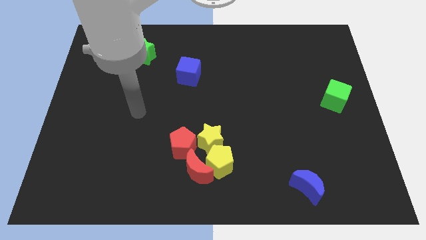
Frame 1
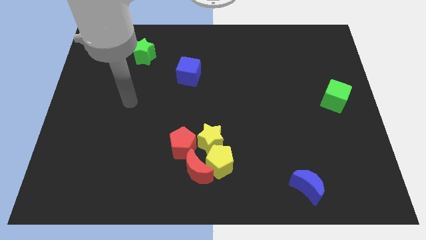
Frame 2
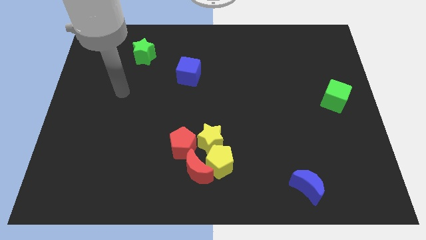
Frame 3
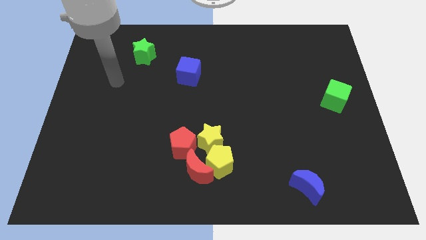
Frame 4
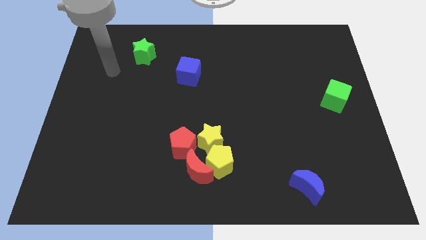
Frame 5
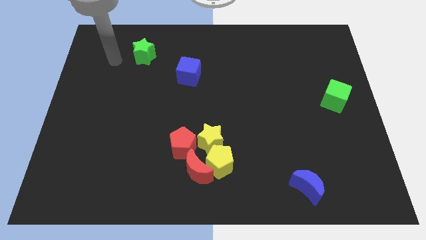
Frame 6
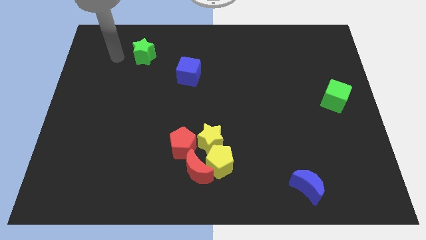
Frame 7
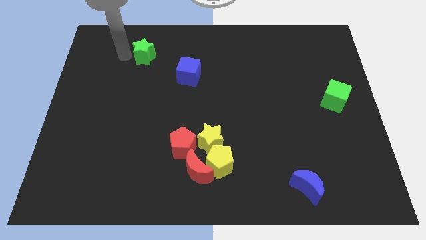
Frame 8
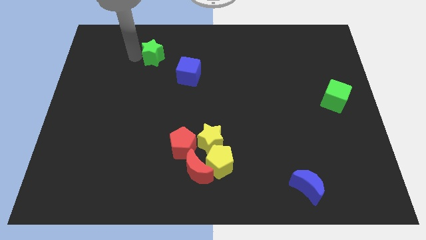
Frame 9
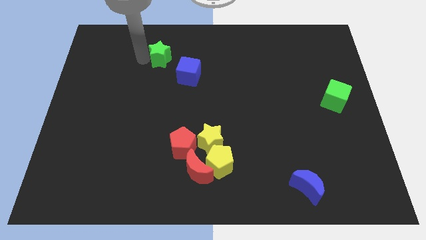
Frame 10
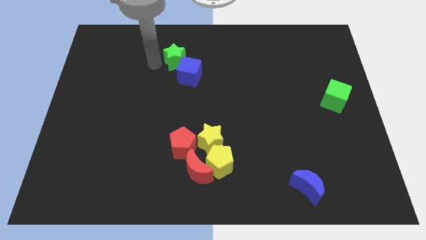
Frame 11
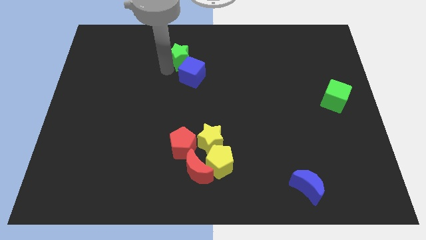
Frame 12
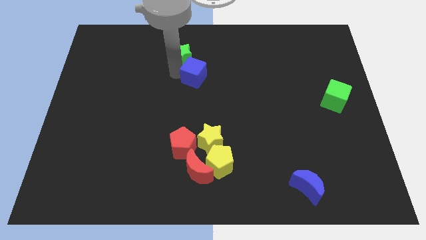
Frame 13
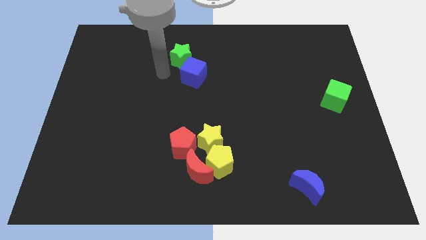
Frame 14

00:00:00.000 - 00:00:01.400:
move the green star to the top left of the blue cube

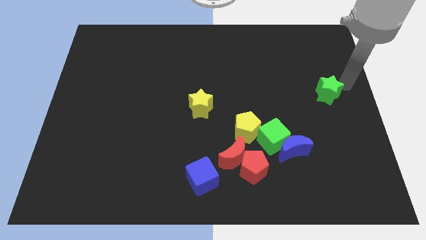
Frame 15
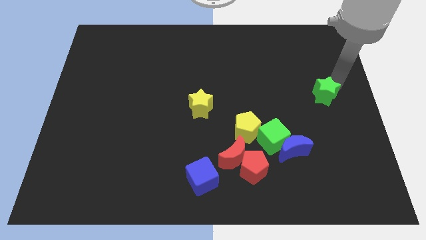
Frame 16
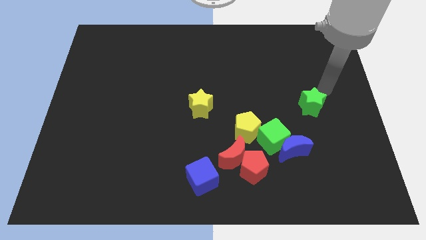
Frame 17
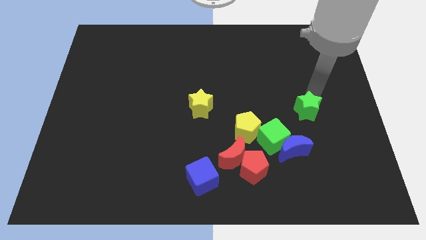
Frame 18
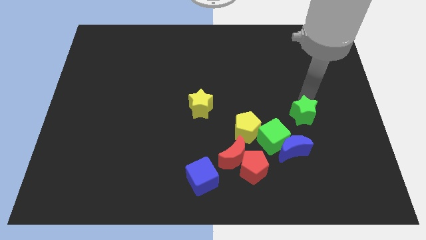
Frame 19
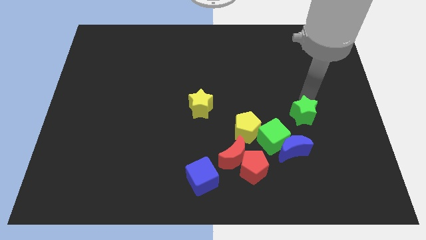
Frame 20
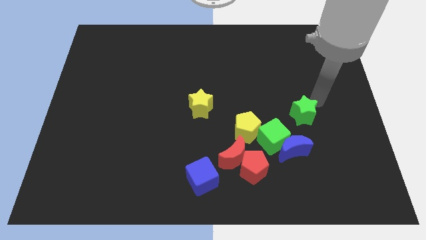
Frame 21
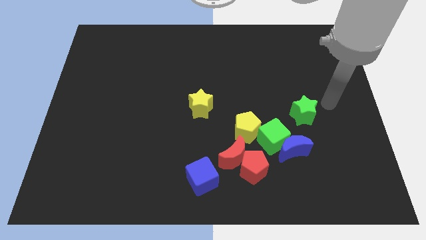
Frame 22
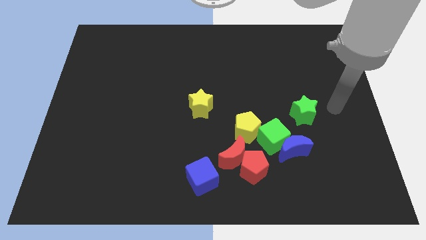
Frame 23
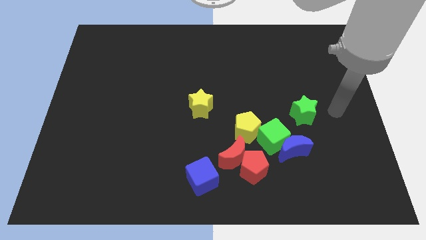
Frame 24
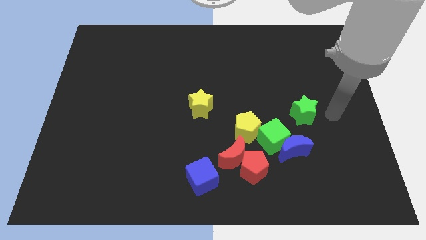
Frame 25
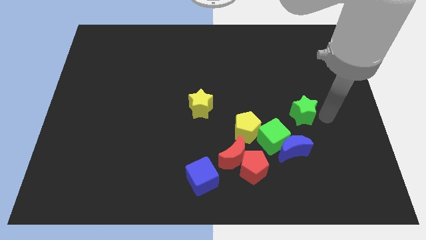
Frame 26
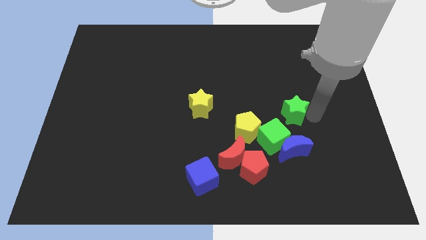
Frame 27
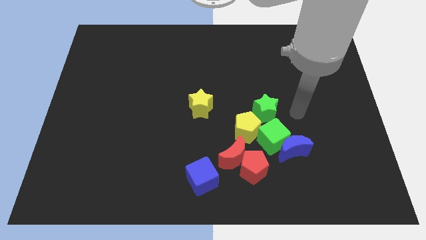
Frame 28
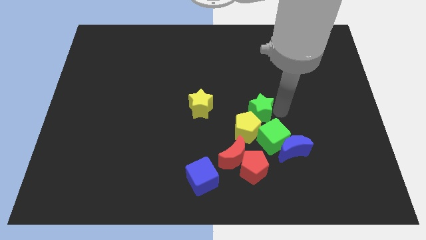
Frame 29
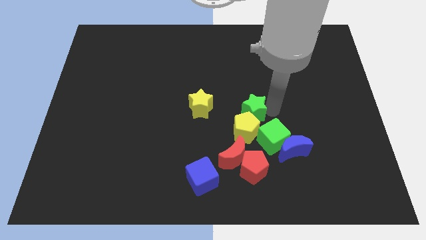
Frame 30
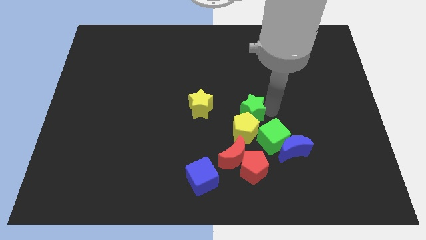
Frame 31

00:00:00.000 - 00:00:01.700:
move the green star into the yellow pentagon

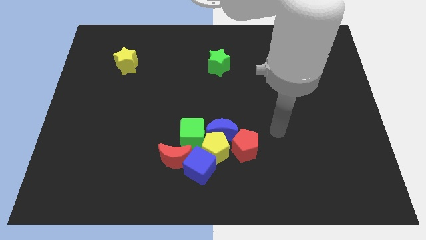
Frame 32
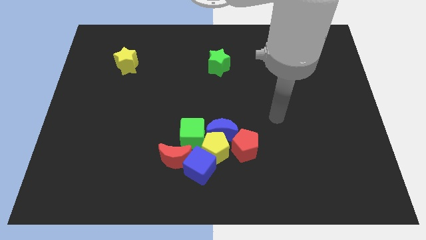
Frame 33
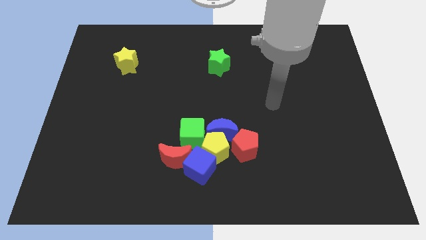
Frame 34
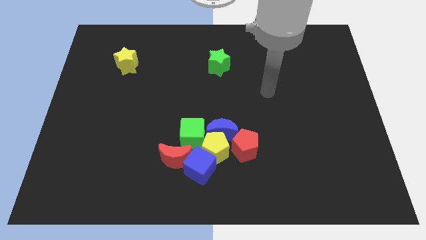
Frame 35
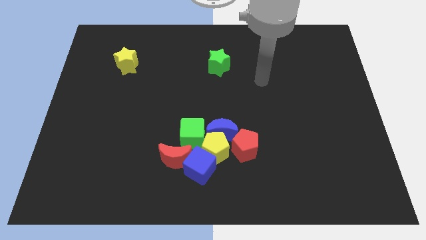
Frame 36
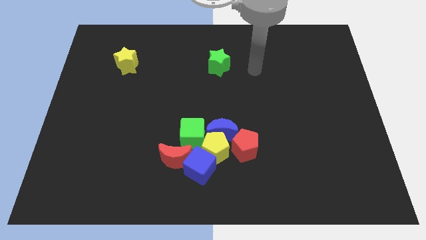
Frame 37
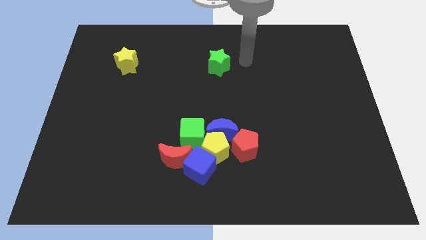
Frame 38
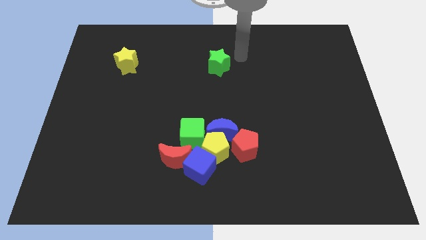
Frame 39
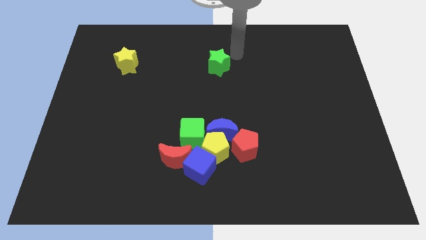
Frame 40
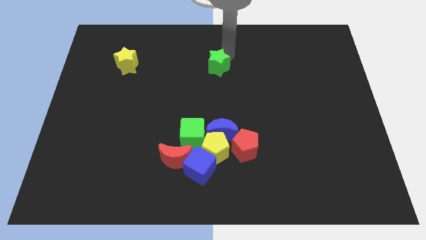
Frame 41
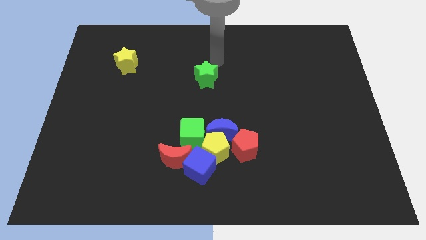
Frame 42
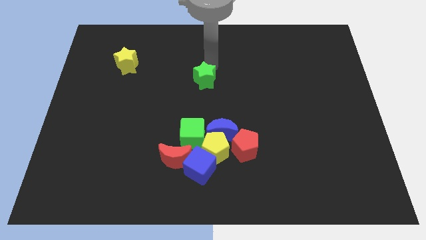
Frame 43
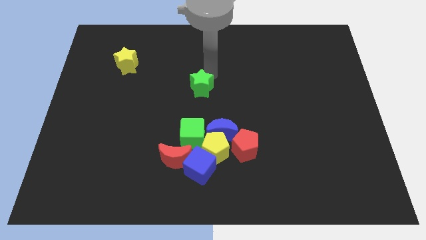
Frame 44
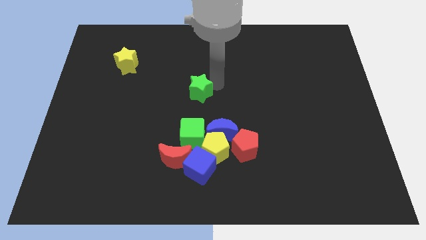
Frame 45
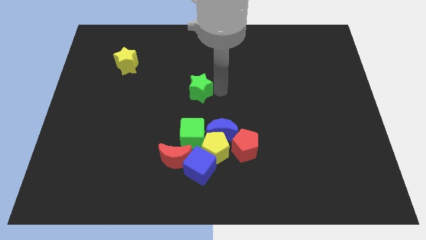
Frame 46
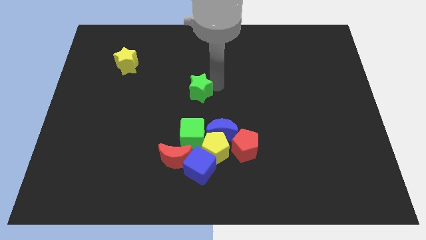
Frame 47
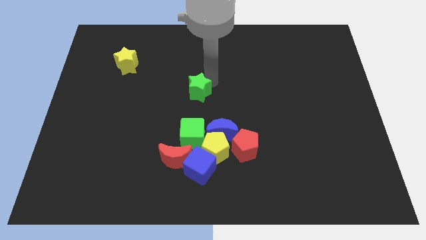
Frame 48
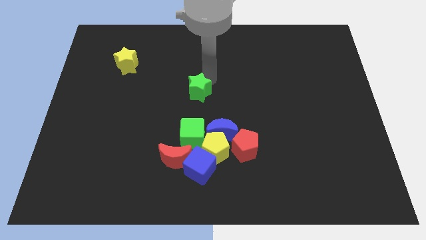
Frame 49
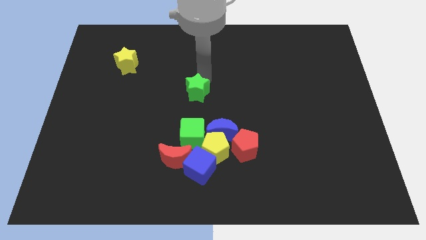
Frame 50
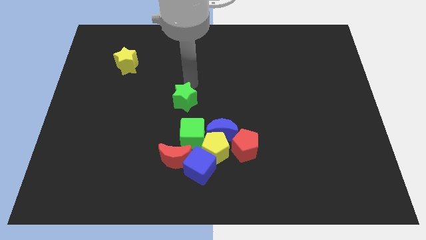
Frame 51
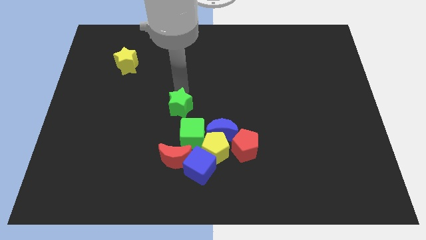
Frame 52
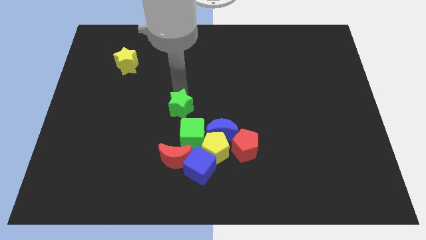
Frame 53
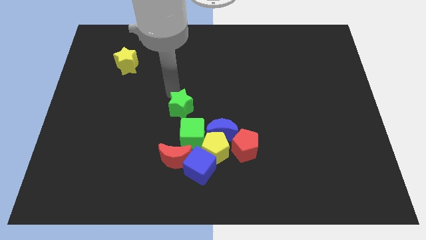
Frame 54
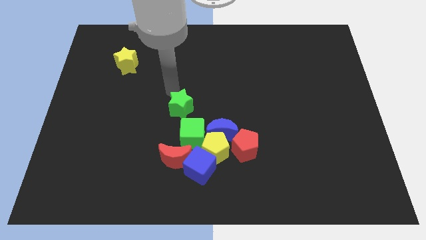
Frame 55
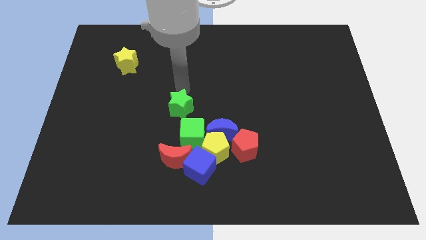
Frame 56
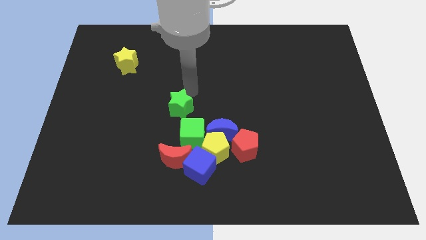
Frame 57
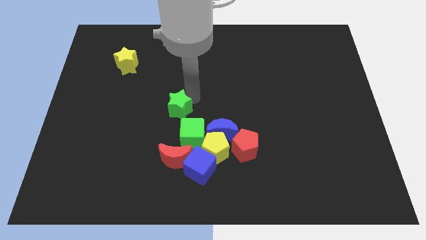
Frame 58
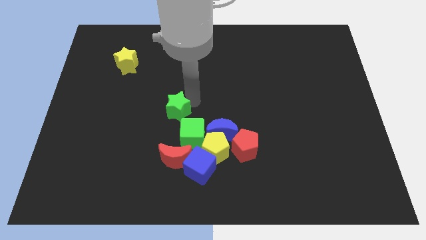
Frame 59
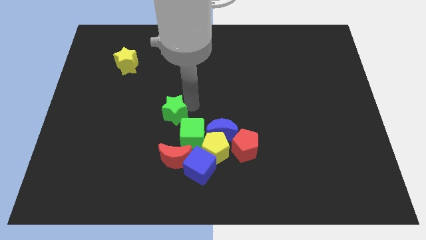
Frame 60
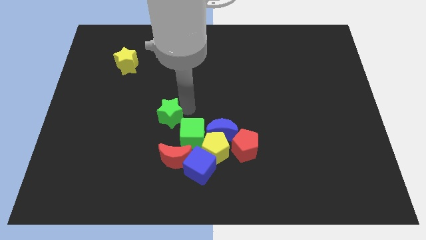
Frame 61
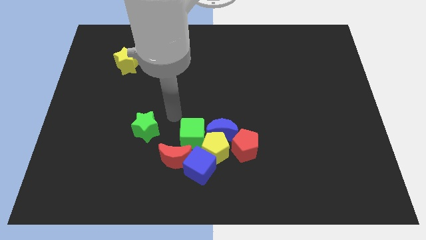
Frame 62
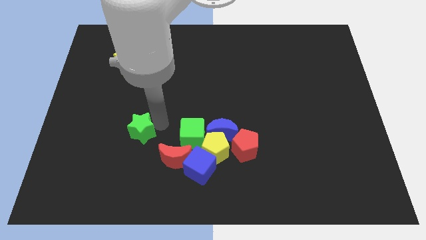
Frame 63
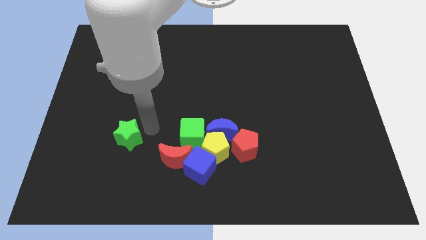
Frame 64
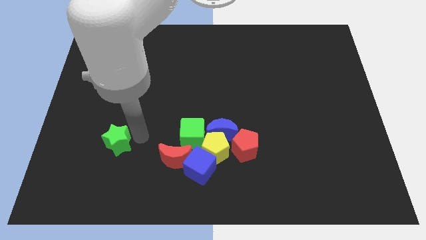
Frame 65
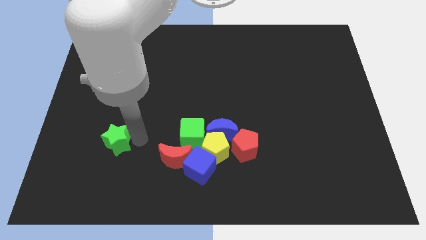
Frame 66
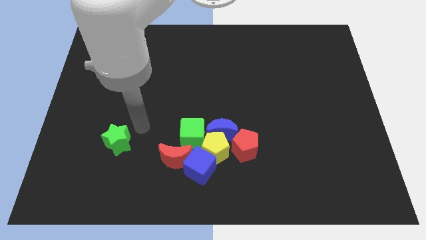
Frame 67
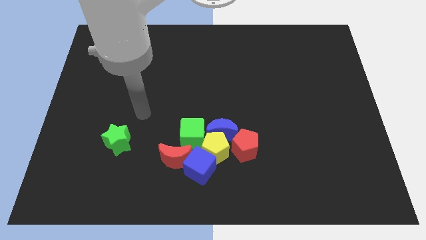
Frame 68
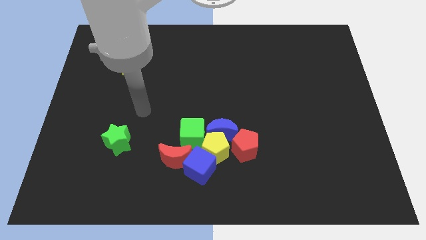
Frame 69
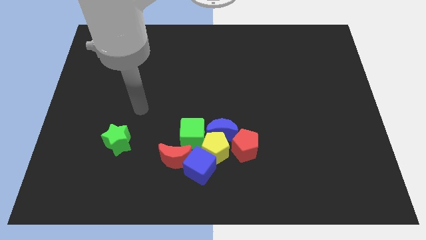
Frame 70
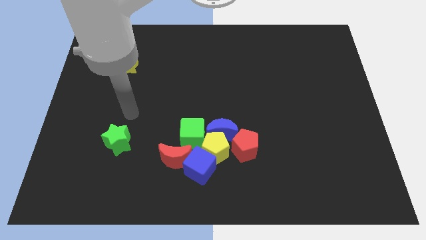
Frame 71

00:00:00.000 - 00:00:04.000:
push the green star towards the bottom left side of the board

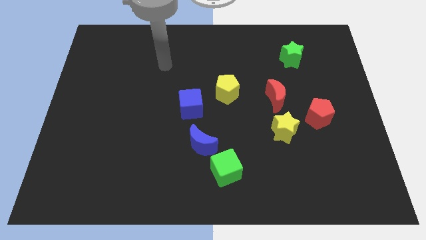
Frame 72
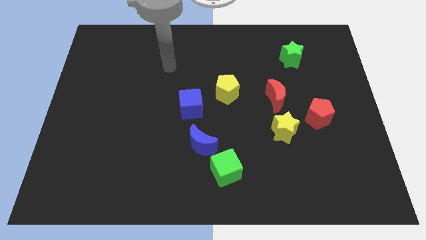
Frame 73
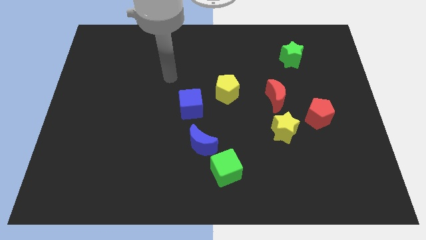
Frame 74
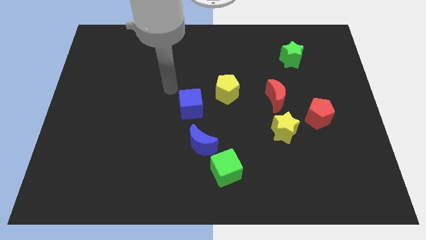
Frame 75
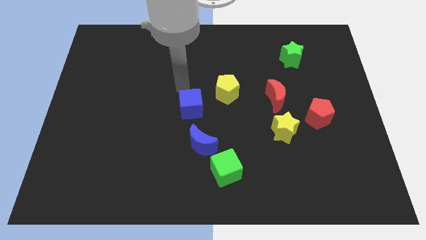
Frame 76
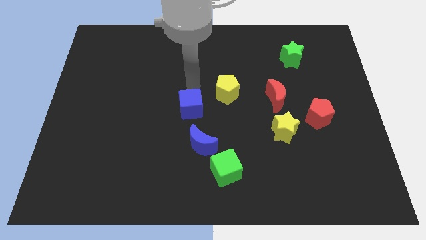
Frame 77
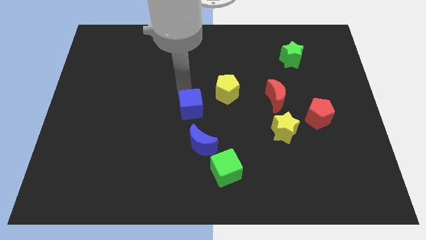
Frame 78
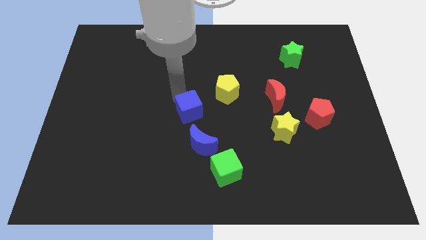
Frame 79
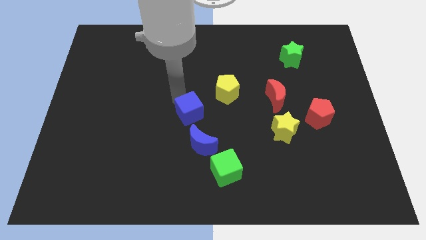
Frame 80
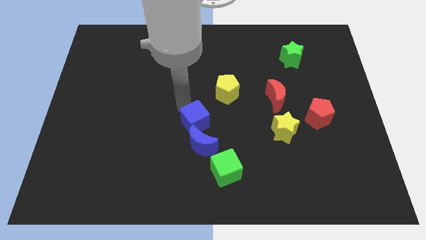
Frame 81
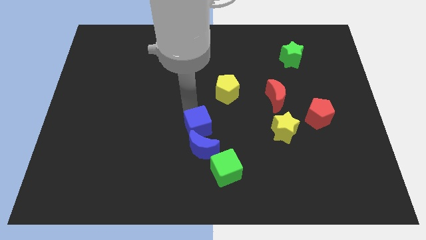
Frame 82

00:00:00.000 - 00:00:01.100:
slide blue cube into blue moon

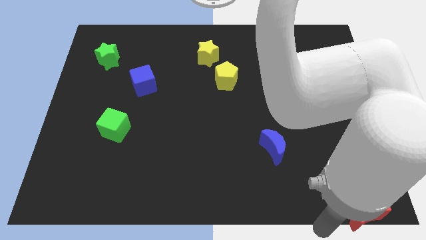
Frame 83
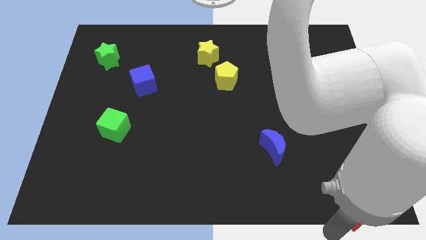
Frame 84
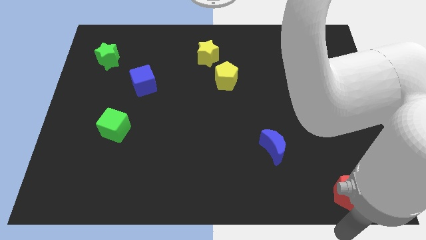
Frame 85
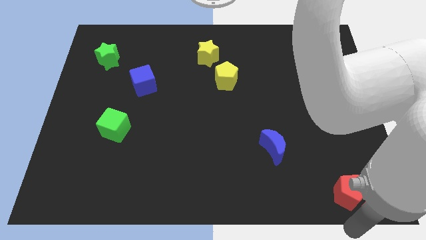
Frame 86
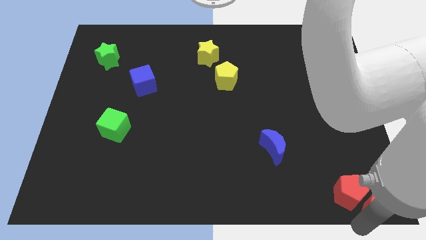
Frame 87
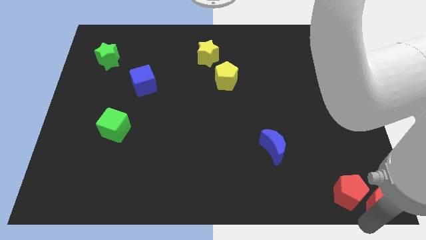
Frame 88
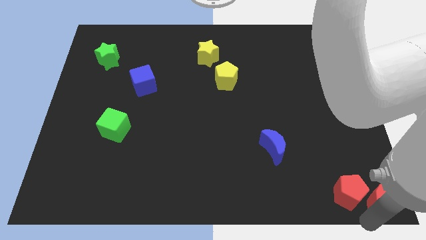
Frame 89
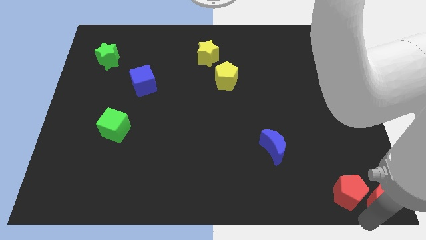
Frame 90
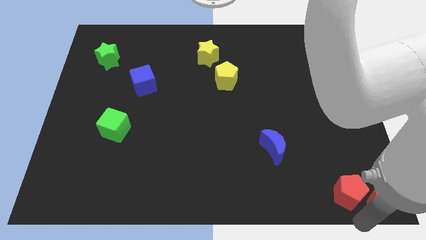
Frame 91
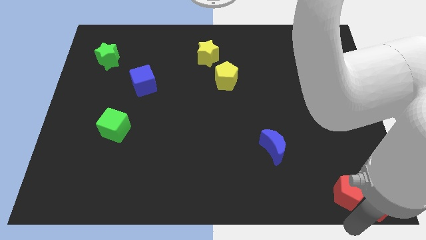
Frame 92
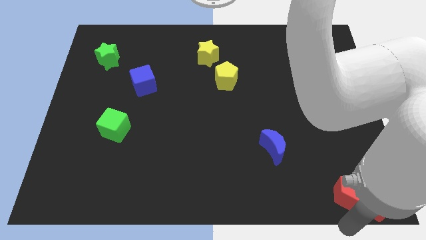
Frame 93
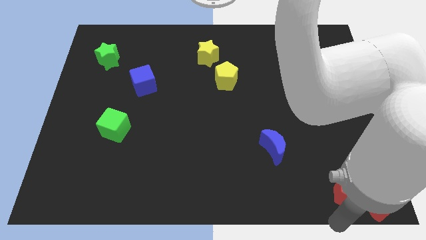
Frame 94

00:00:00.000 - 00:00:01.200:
slide the red moon towards the bottom right corner
